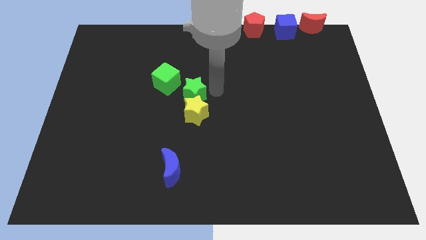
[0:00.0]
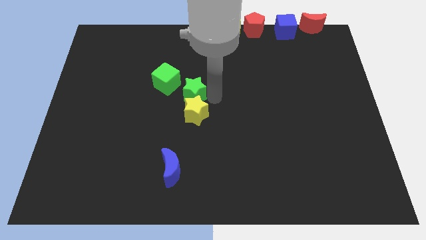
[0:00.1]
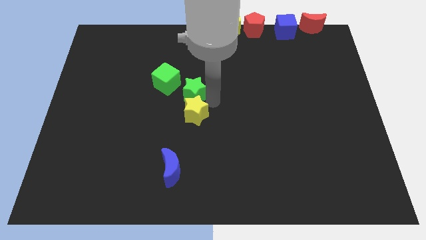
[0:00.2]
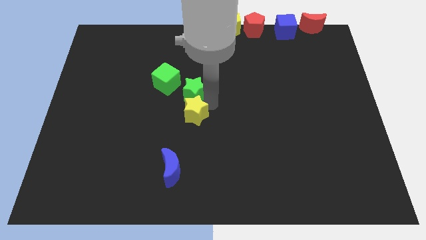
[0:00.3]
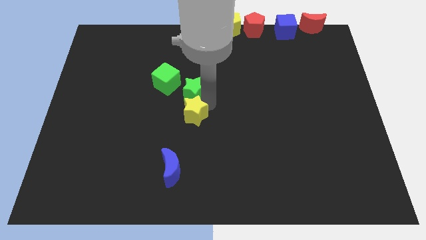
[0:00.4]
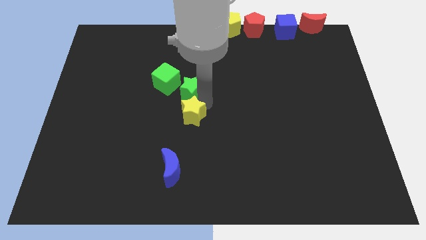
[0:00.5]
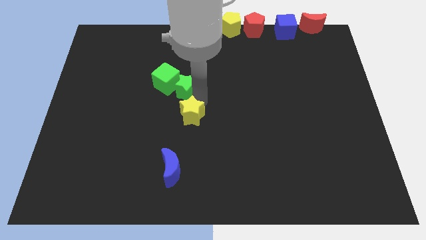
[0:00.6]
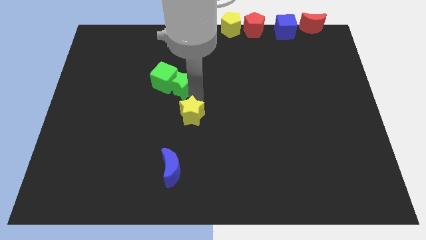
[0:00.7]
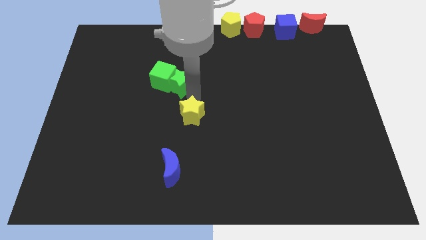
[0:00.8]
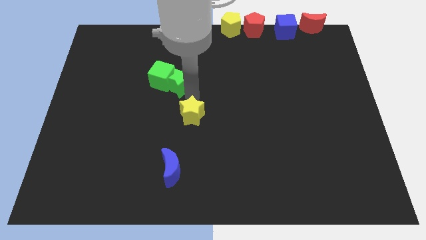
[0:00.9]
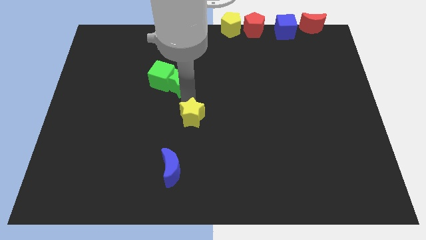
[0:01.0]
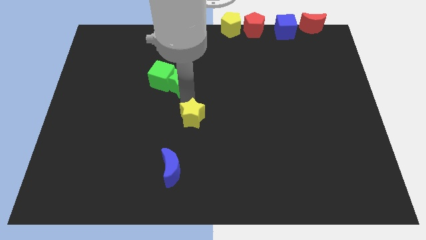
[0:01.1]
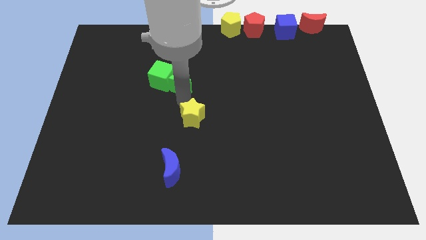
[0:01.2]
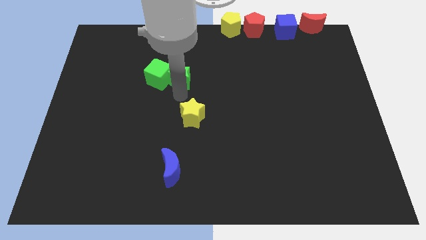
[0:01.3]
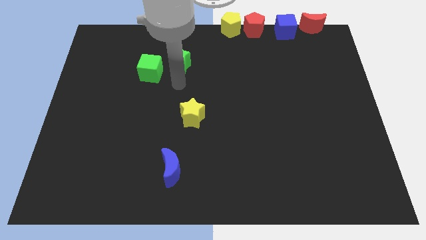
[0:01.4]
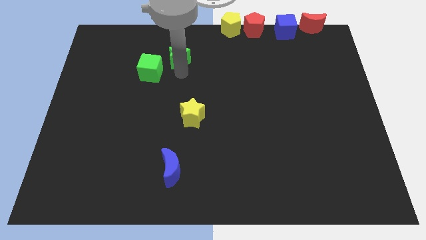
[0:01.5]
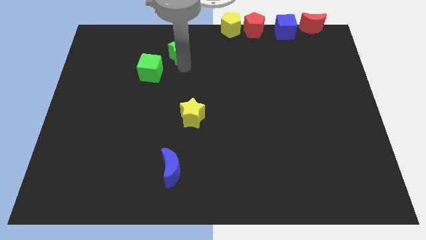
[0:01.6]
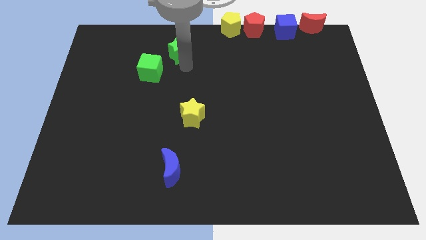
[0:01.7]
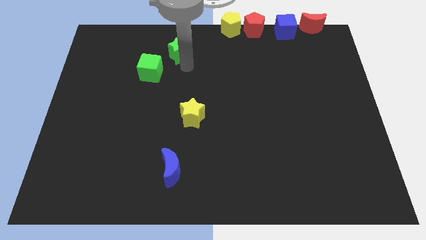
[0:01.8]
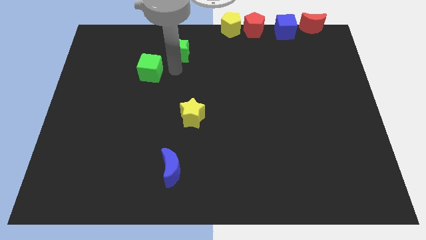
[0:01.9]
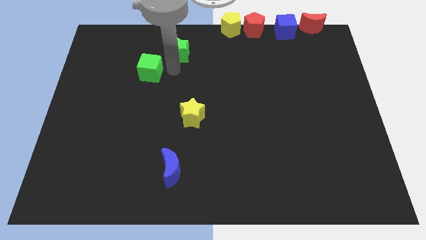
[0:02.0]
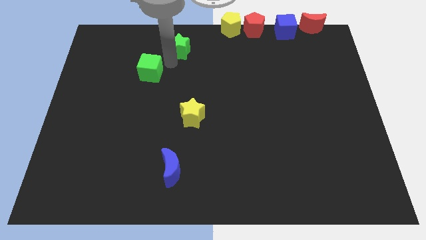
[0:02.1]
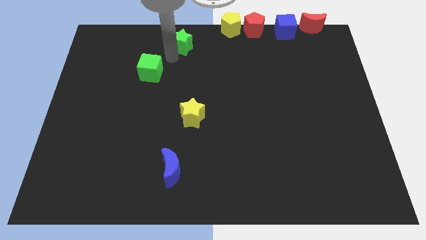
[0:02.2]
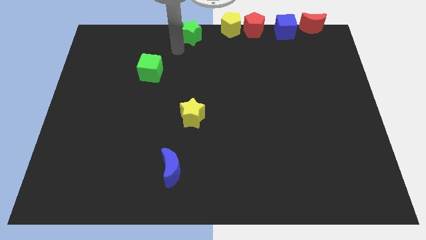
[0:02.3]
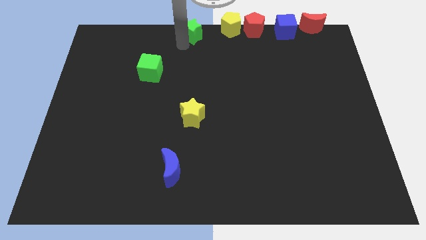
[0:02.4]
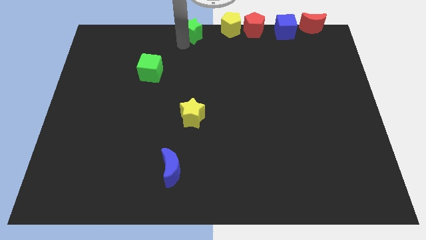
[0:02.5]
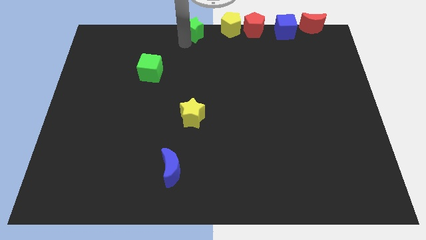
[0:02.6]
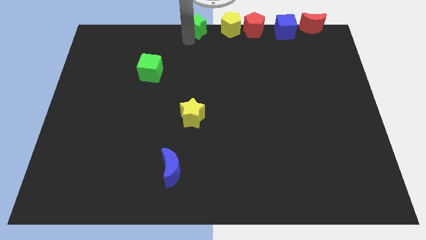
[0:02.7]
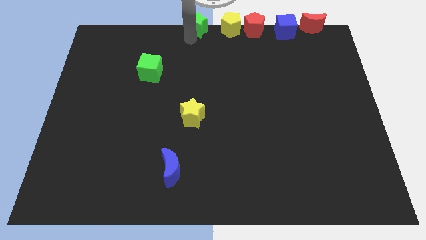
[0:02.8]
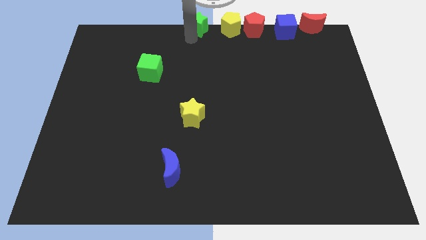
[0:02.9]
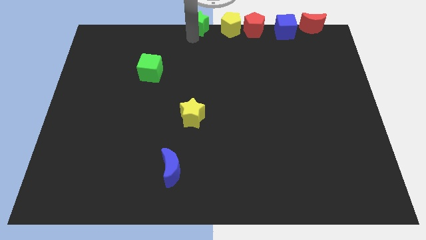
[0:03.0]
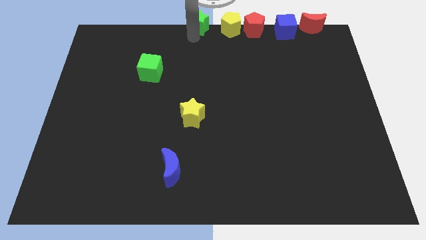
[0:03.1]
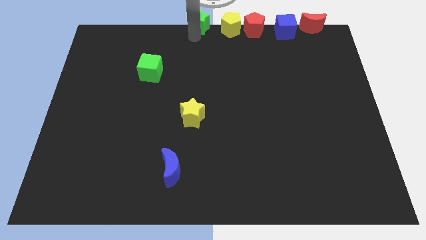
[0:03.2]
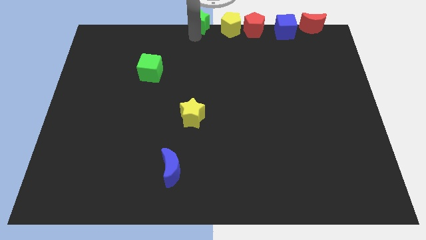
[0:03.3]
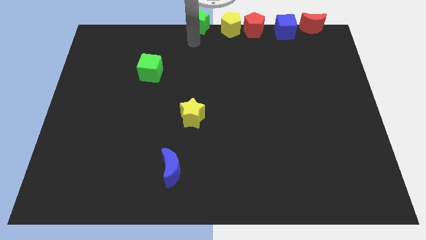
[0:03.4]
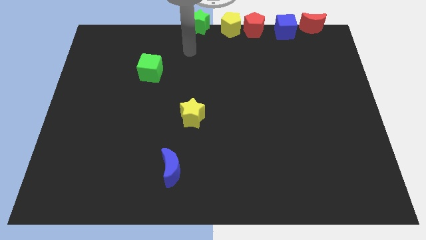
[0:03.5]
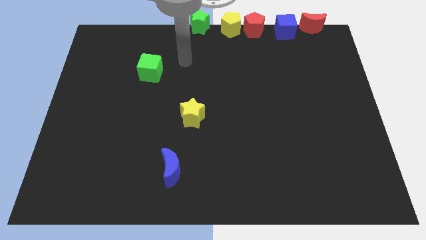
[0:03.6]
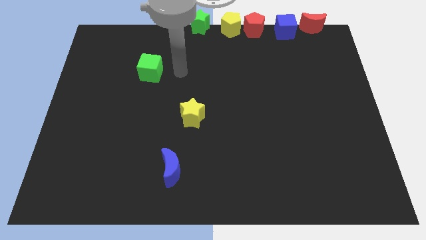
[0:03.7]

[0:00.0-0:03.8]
place the green star beside the yellow pentagon

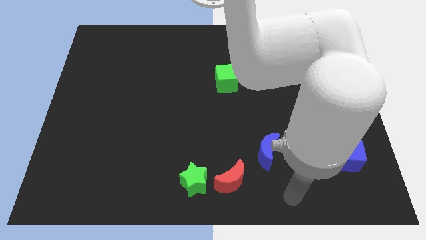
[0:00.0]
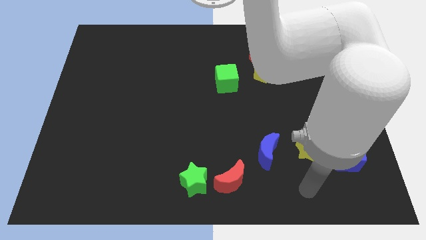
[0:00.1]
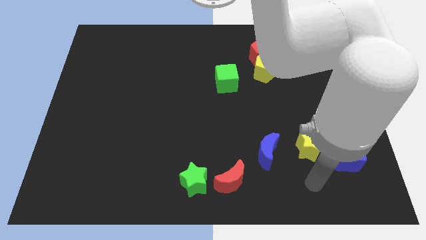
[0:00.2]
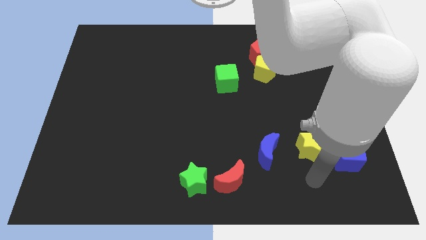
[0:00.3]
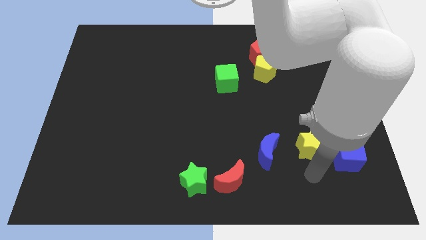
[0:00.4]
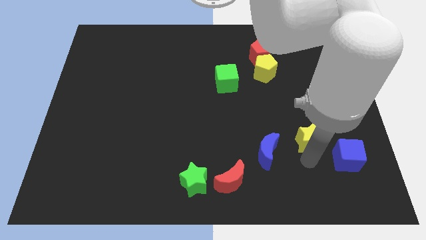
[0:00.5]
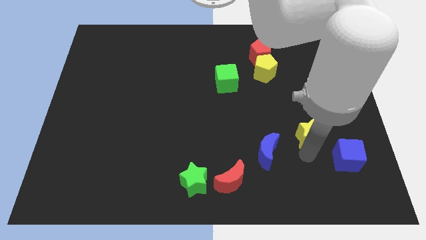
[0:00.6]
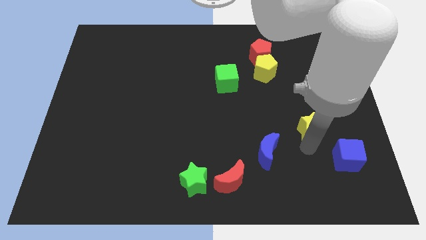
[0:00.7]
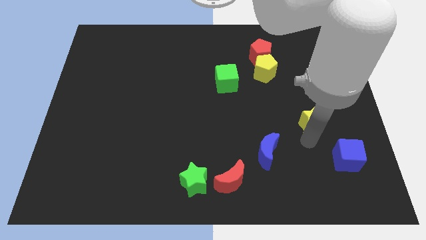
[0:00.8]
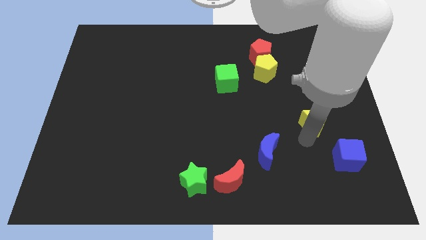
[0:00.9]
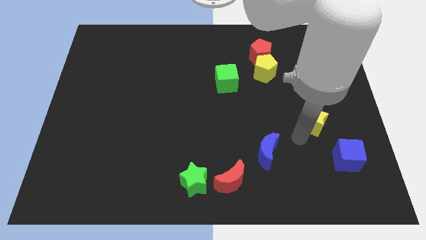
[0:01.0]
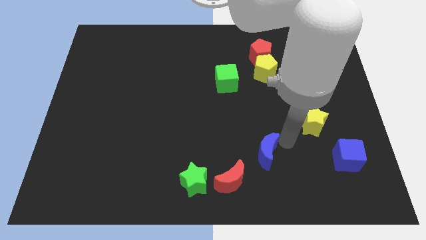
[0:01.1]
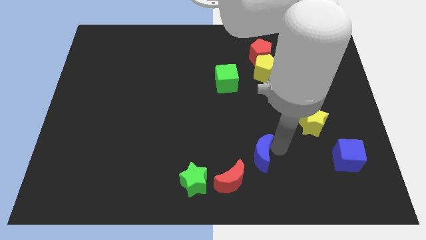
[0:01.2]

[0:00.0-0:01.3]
move the yellow star slightly upwards

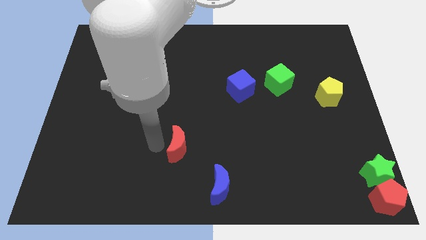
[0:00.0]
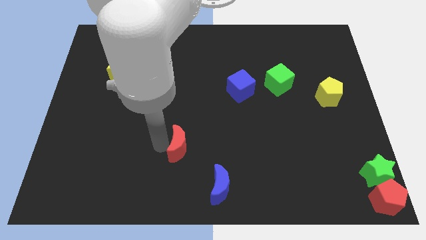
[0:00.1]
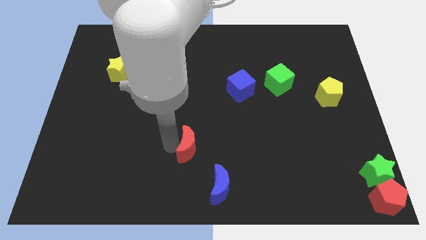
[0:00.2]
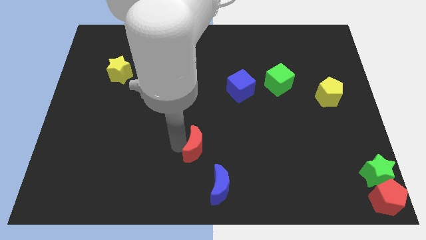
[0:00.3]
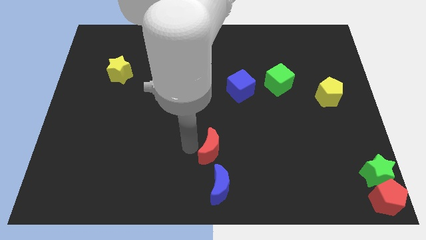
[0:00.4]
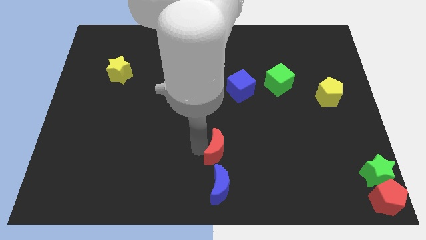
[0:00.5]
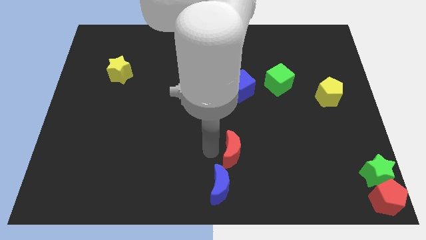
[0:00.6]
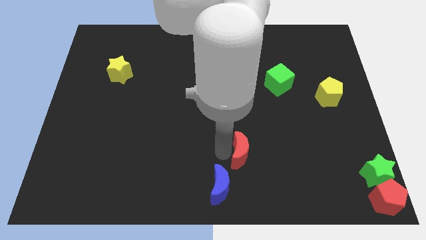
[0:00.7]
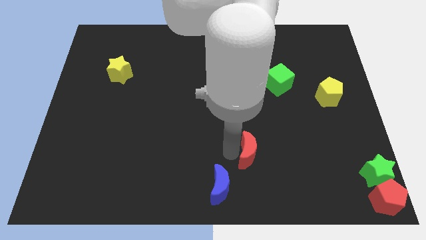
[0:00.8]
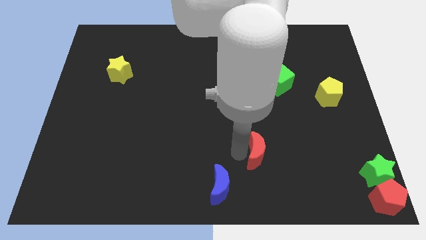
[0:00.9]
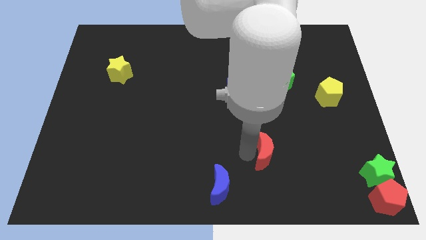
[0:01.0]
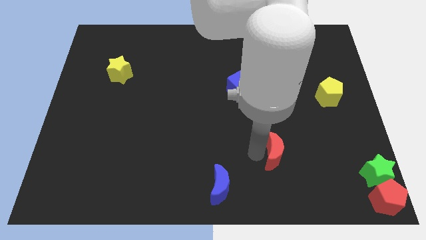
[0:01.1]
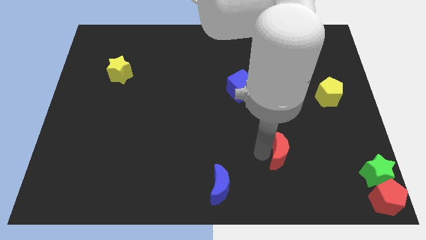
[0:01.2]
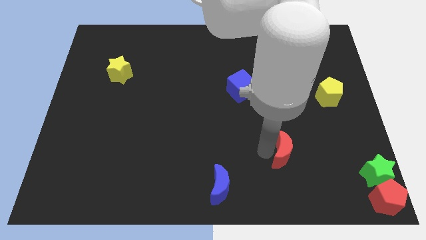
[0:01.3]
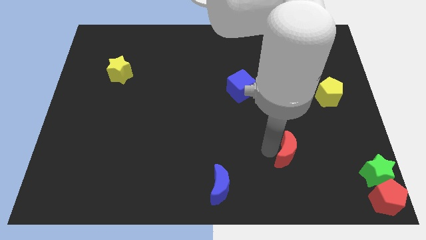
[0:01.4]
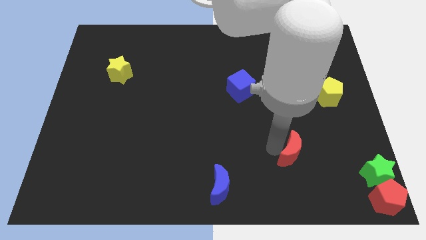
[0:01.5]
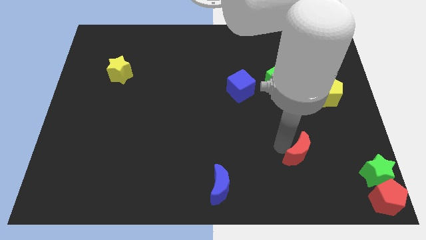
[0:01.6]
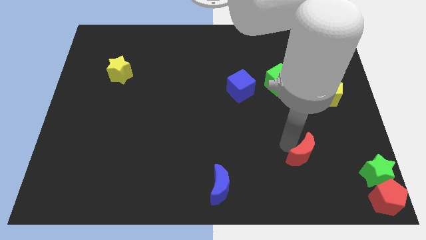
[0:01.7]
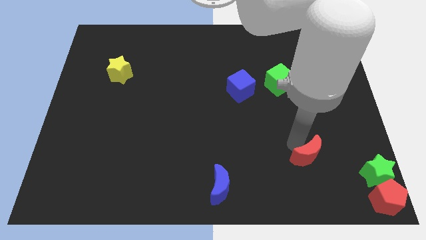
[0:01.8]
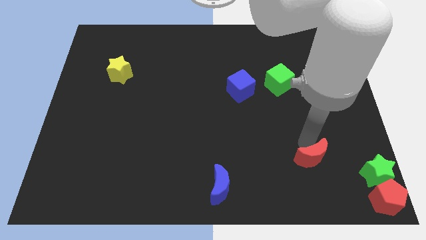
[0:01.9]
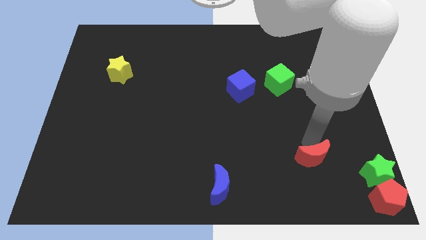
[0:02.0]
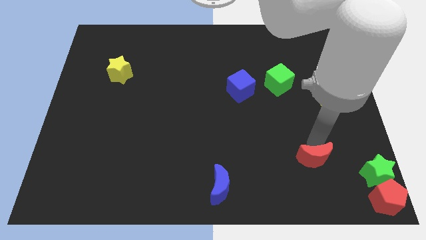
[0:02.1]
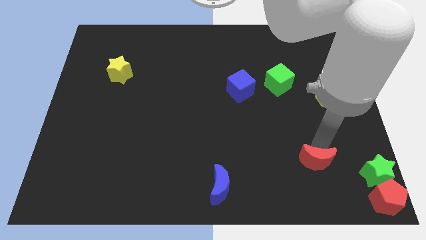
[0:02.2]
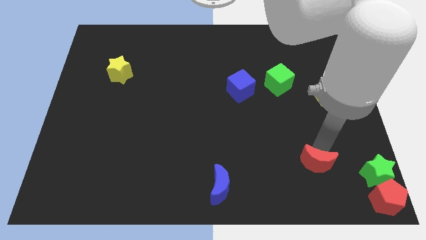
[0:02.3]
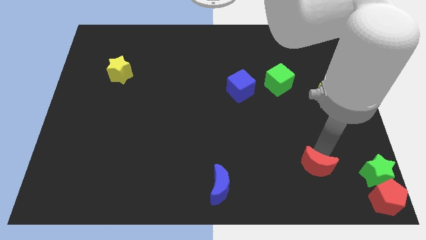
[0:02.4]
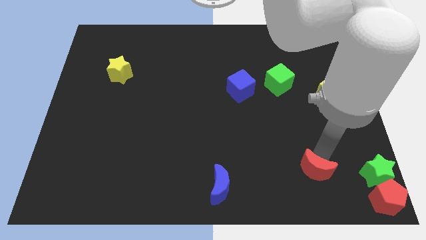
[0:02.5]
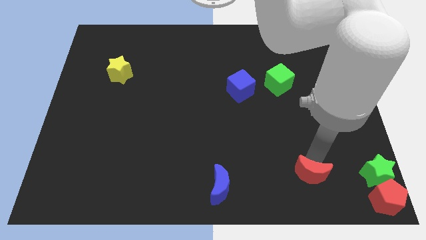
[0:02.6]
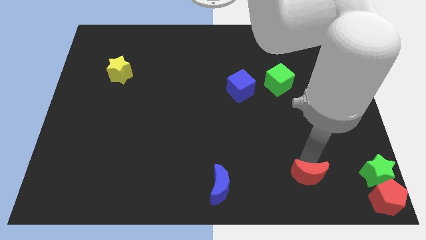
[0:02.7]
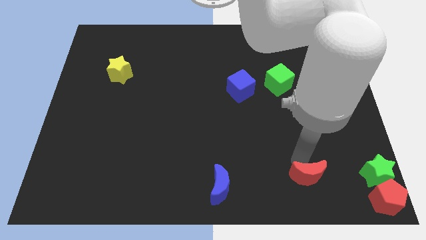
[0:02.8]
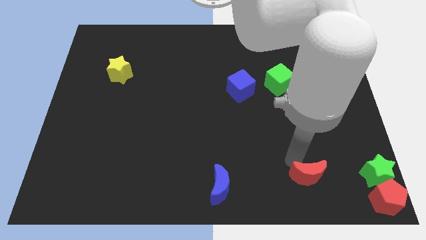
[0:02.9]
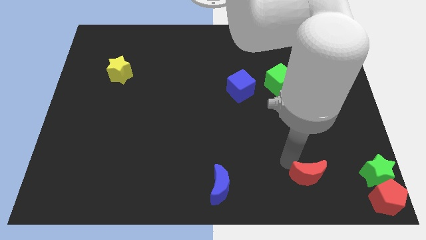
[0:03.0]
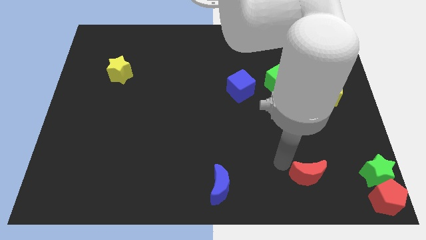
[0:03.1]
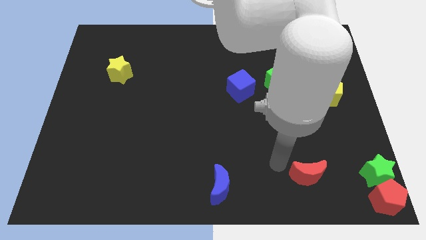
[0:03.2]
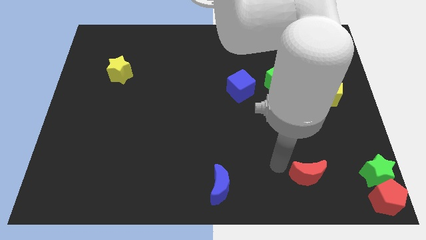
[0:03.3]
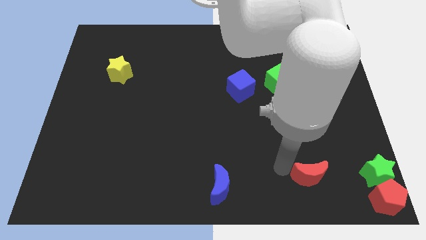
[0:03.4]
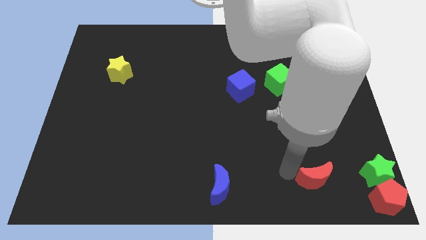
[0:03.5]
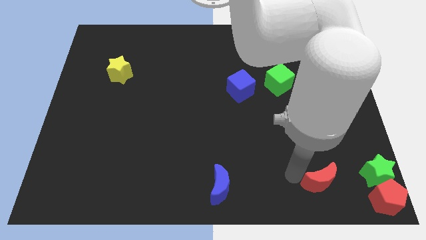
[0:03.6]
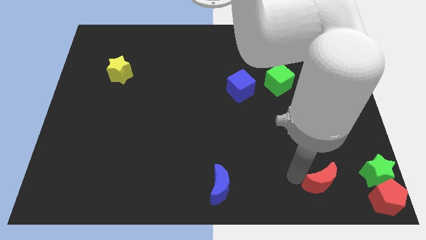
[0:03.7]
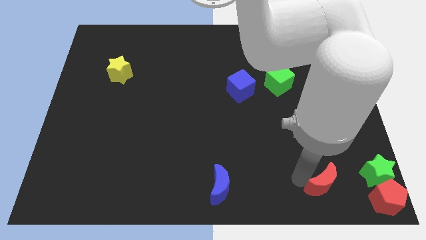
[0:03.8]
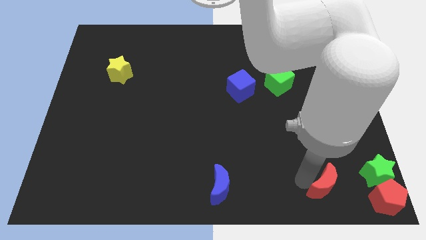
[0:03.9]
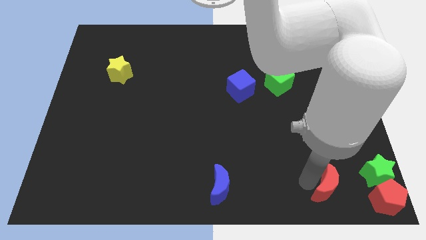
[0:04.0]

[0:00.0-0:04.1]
move the red crescent to the bottom right of the board
